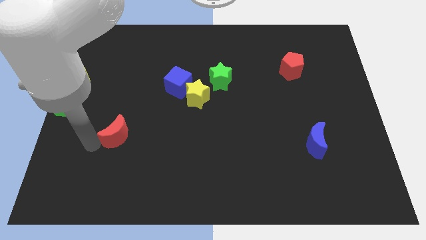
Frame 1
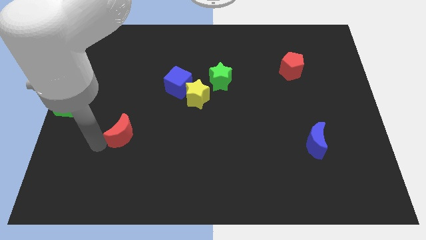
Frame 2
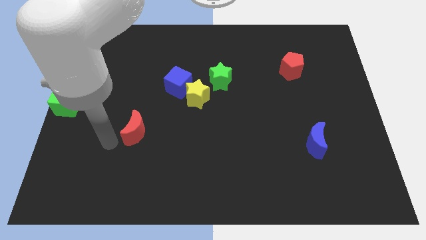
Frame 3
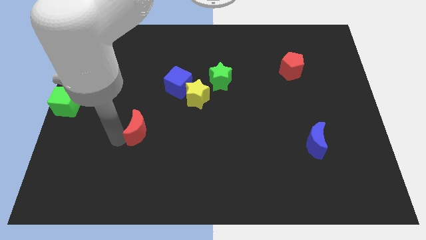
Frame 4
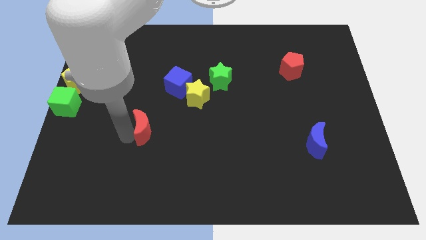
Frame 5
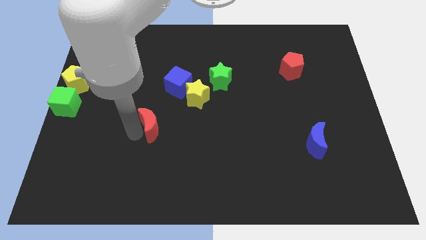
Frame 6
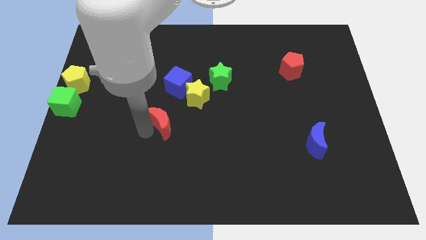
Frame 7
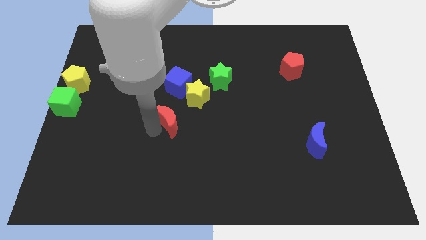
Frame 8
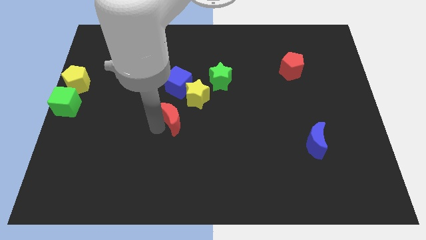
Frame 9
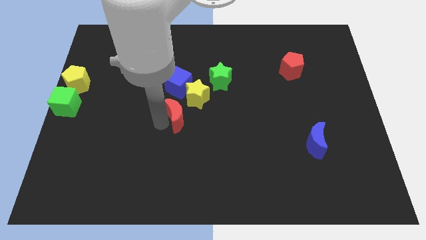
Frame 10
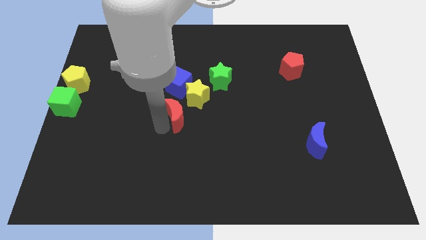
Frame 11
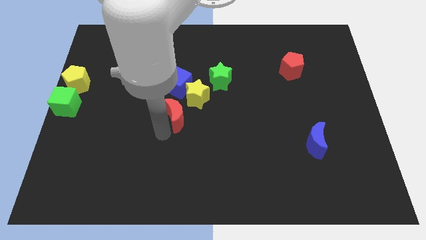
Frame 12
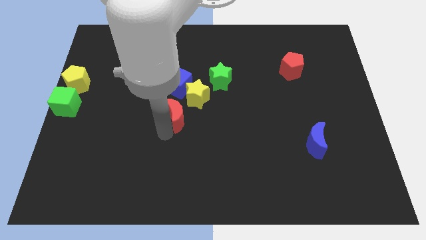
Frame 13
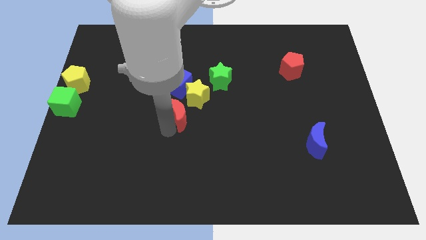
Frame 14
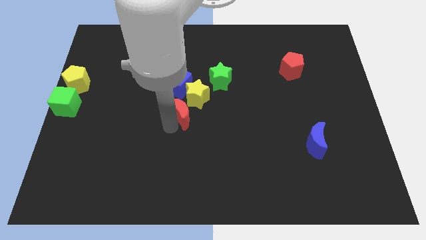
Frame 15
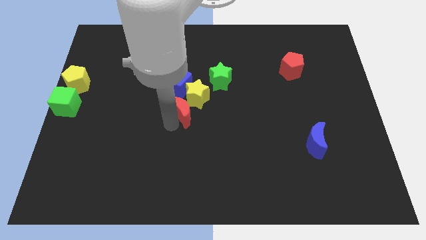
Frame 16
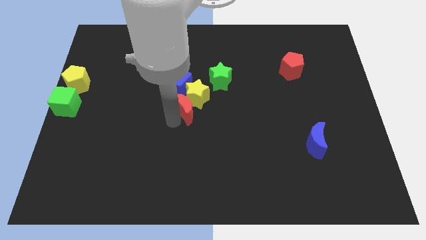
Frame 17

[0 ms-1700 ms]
move red crescent towards the yellow star

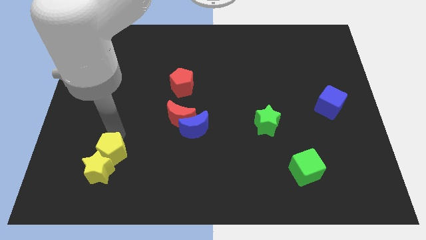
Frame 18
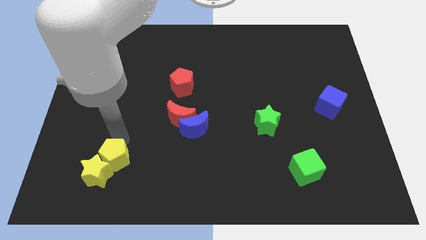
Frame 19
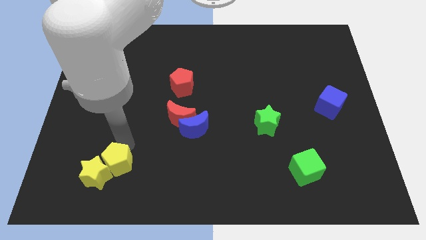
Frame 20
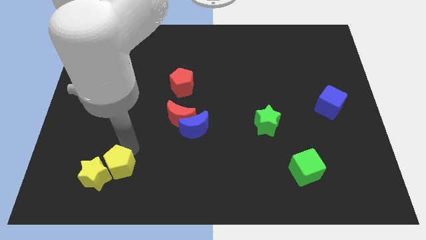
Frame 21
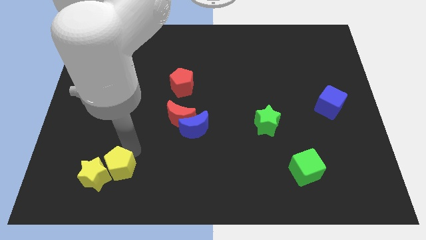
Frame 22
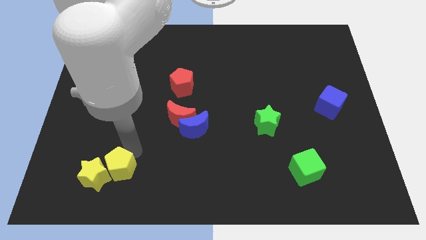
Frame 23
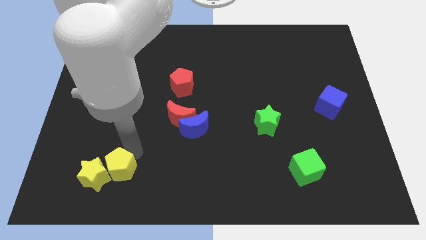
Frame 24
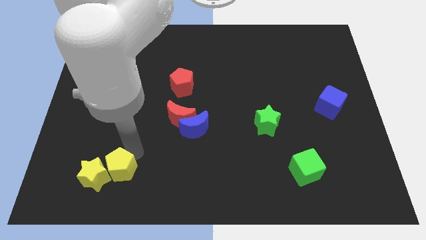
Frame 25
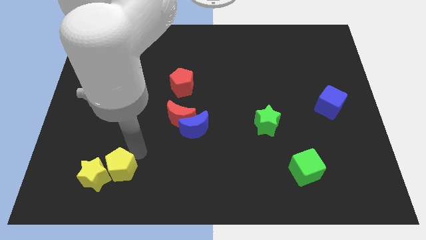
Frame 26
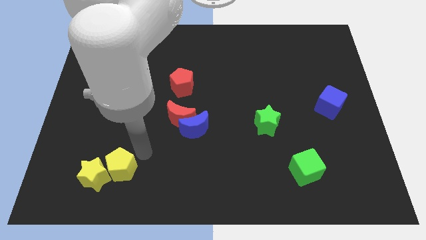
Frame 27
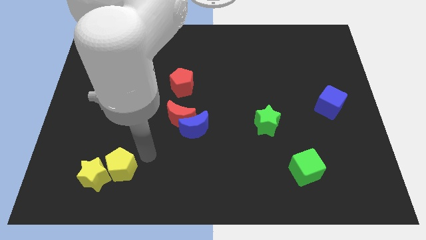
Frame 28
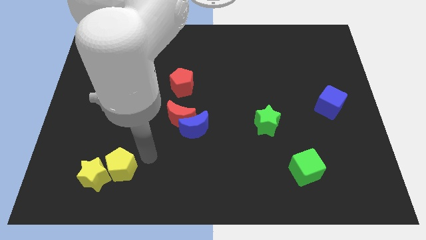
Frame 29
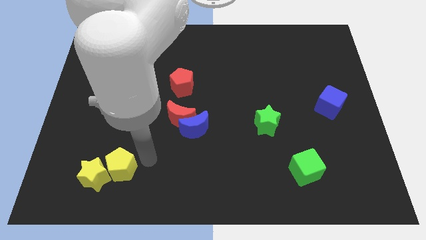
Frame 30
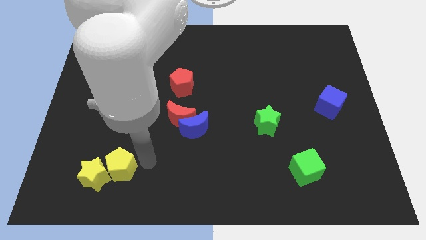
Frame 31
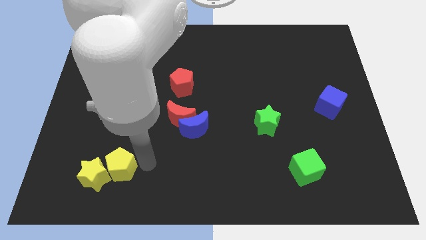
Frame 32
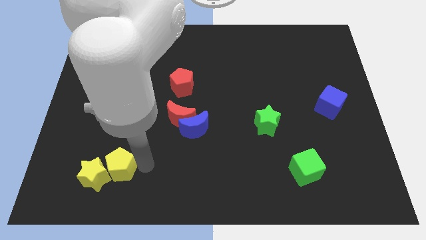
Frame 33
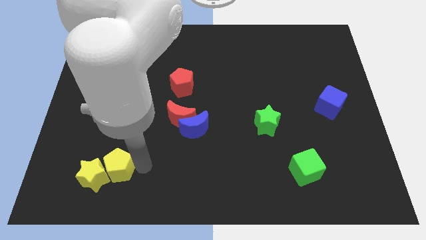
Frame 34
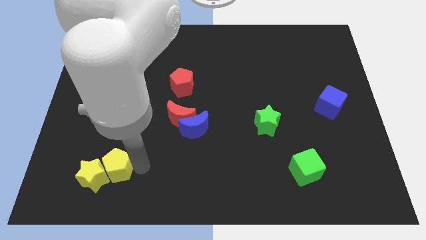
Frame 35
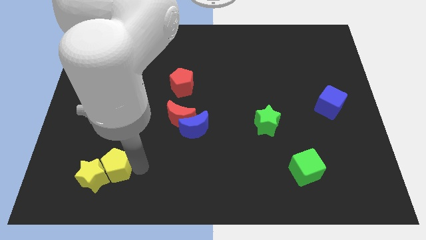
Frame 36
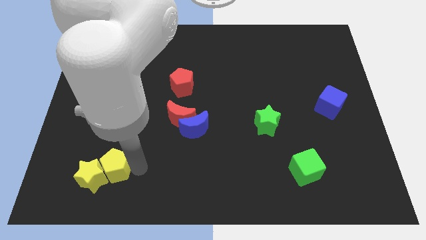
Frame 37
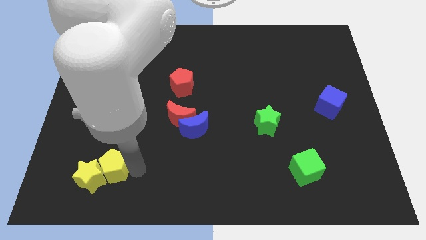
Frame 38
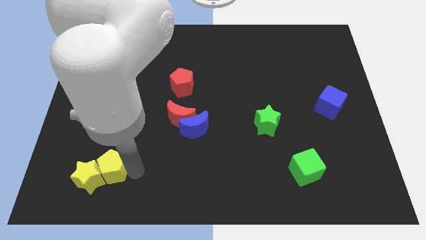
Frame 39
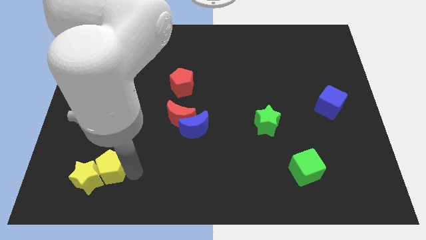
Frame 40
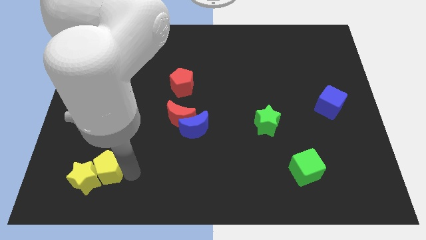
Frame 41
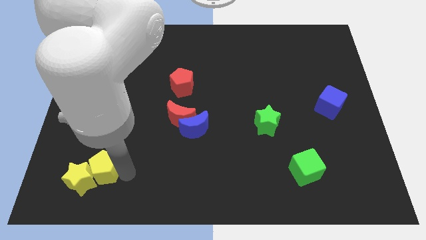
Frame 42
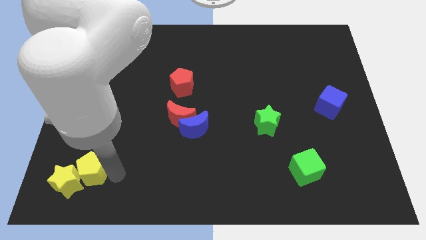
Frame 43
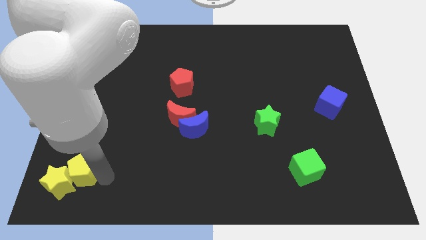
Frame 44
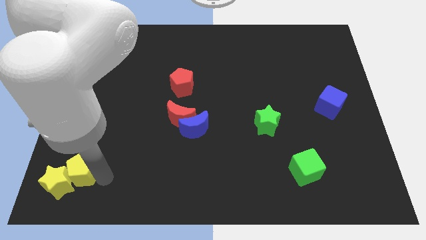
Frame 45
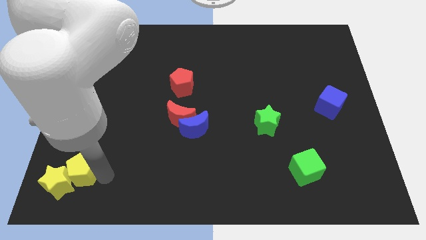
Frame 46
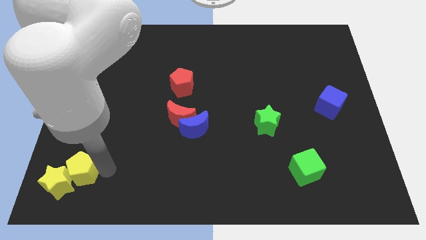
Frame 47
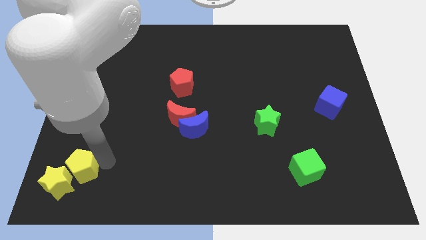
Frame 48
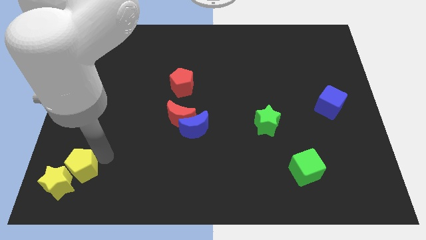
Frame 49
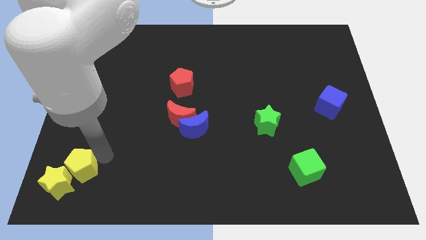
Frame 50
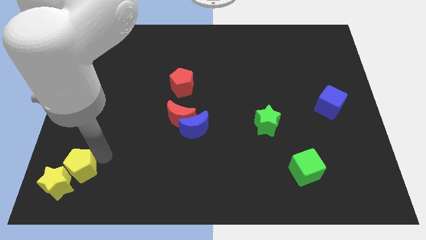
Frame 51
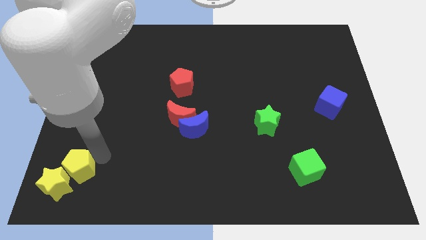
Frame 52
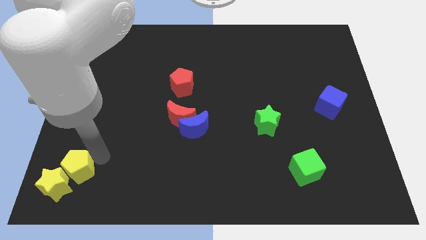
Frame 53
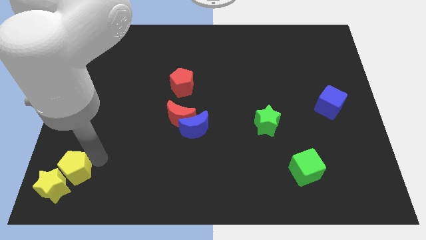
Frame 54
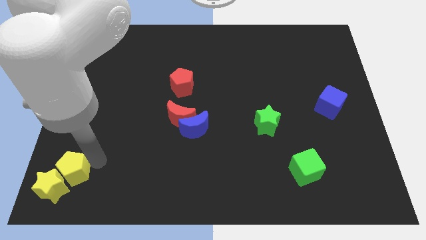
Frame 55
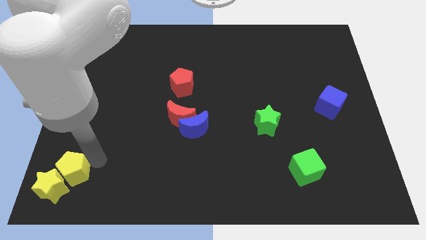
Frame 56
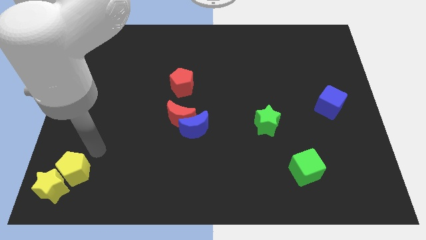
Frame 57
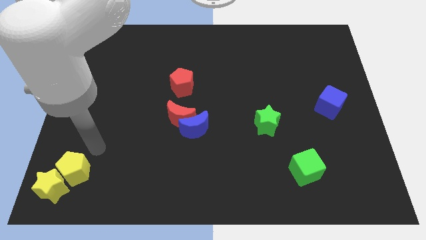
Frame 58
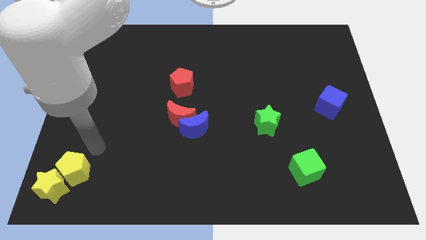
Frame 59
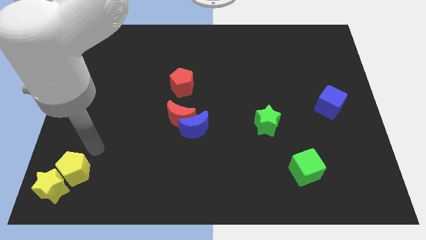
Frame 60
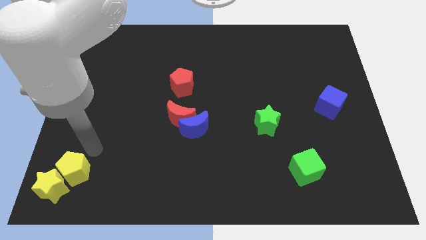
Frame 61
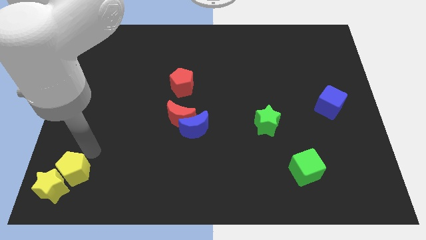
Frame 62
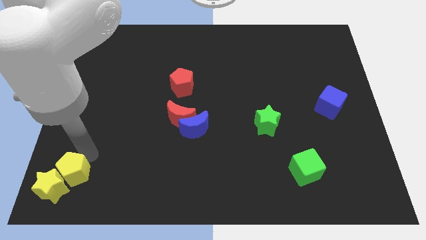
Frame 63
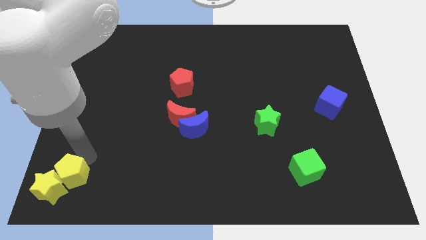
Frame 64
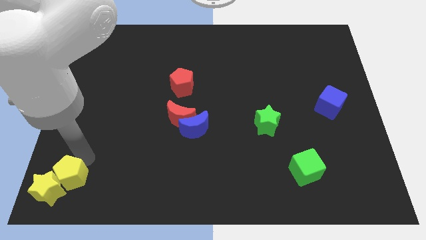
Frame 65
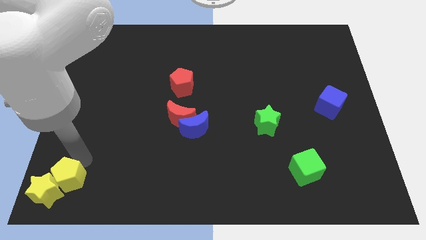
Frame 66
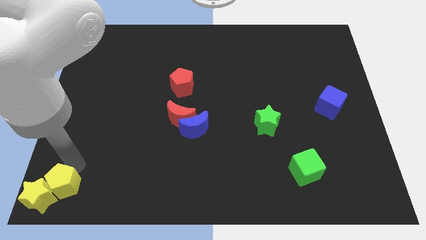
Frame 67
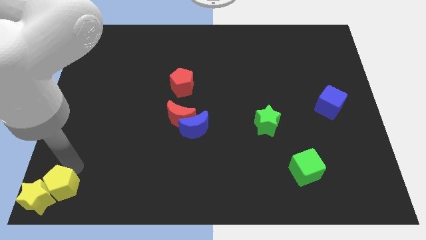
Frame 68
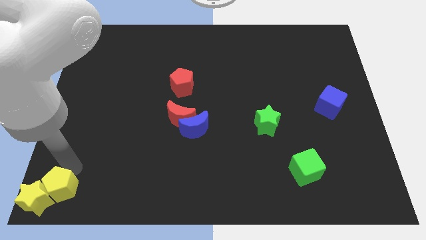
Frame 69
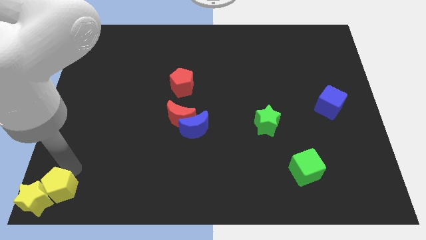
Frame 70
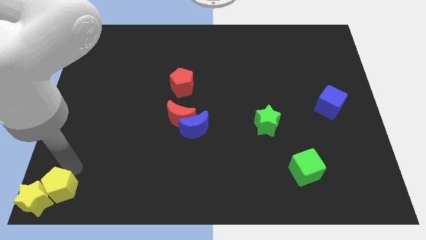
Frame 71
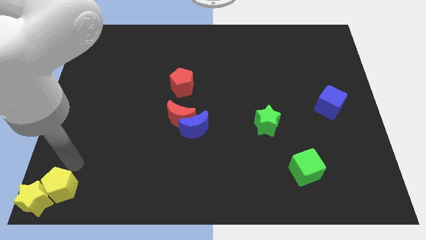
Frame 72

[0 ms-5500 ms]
push the yellow pentagon along with yellow star to the bottom left to the board

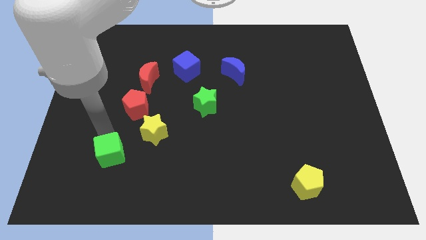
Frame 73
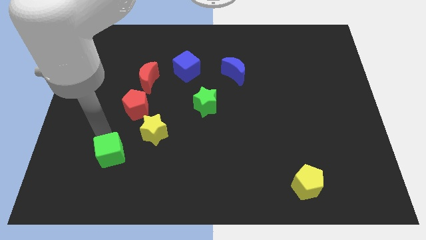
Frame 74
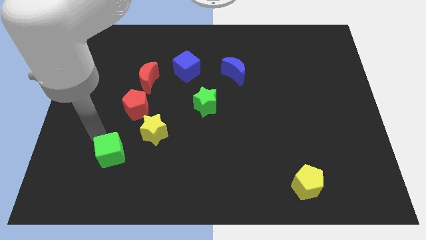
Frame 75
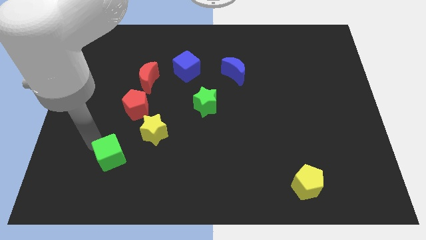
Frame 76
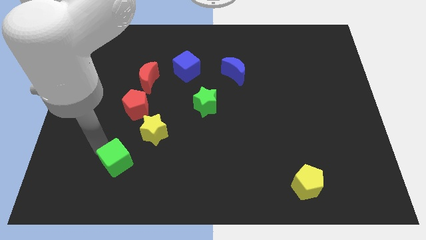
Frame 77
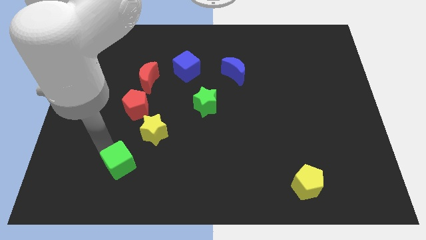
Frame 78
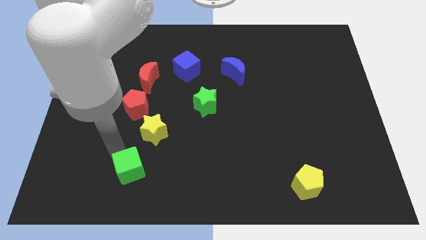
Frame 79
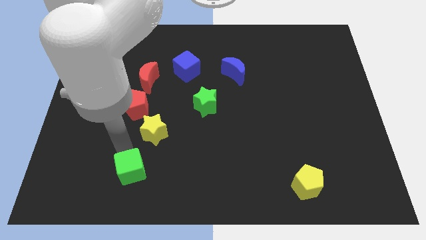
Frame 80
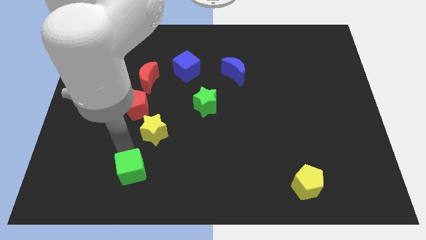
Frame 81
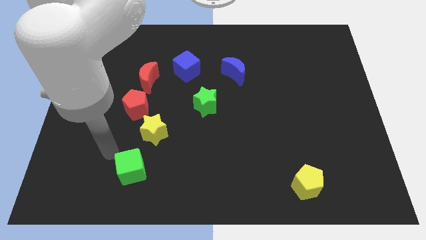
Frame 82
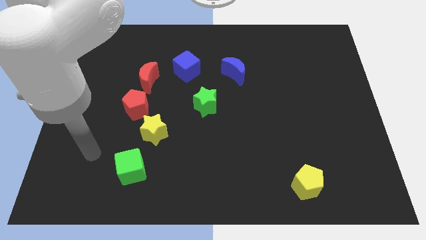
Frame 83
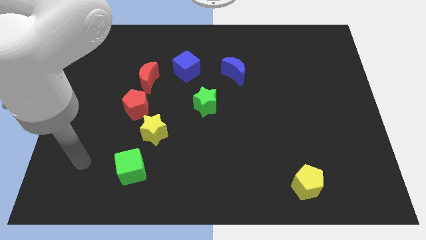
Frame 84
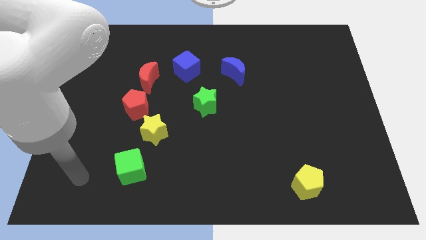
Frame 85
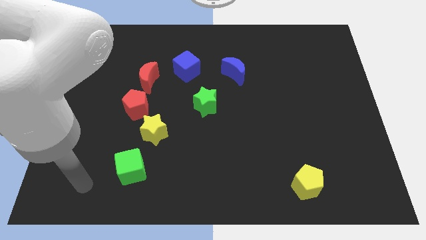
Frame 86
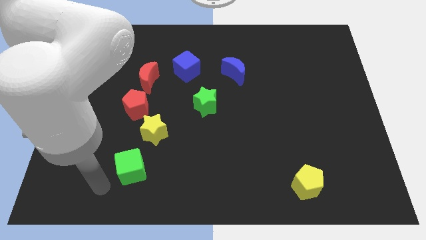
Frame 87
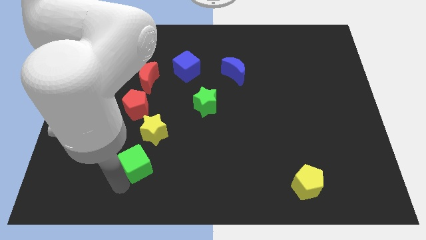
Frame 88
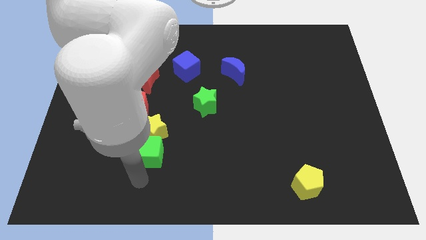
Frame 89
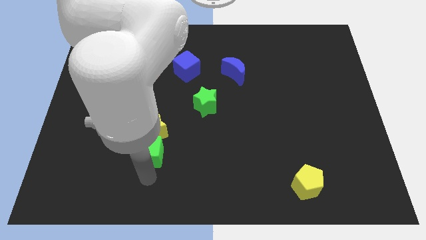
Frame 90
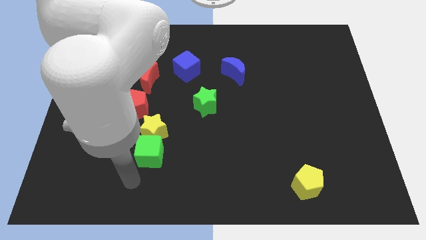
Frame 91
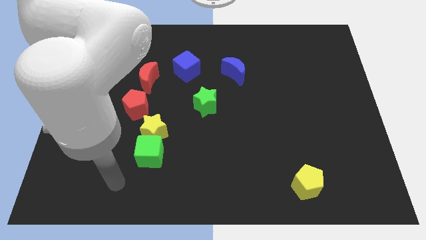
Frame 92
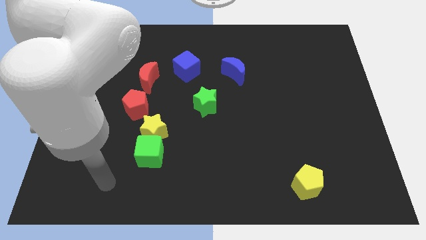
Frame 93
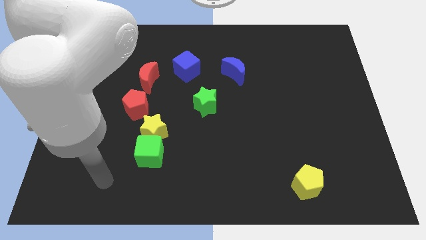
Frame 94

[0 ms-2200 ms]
push the green cube below to the yellow star
